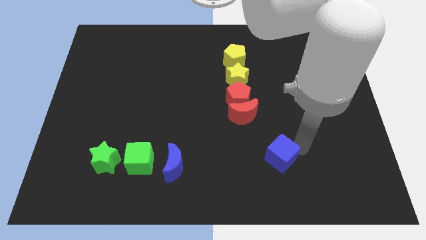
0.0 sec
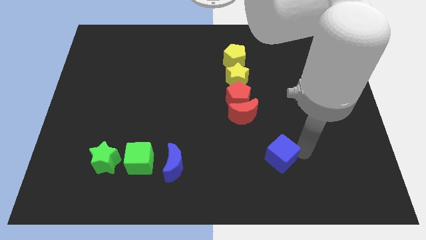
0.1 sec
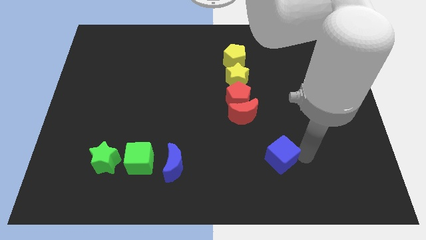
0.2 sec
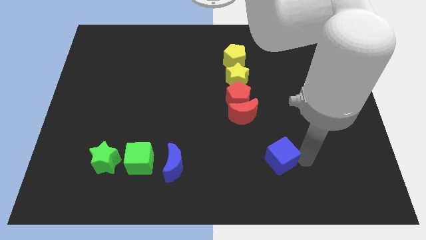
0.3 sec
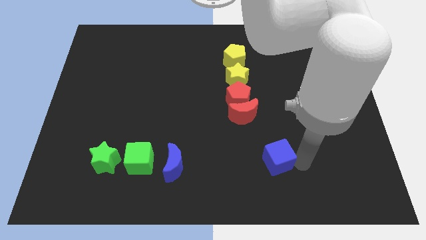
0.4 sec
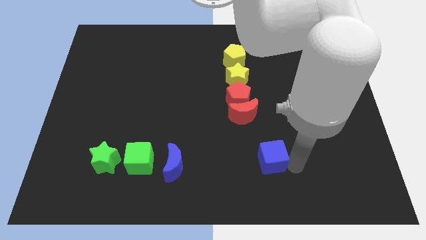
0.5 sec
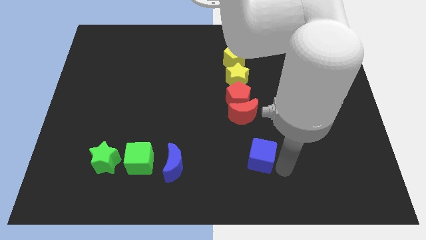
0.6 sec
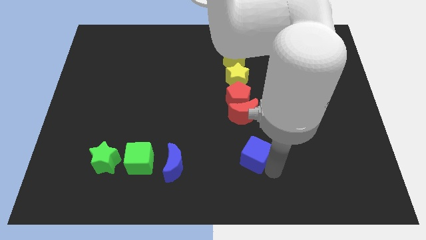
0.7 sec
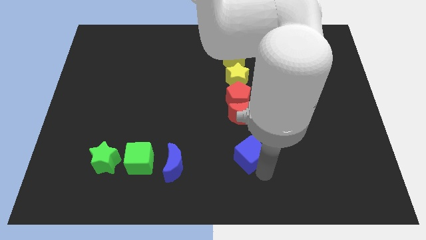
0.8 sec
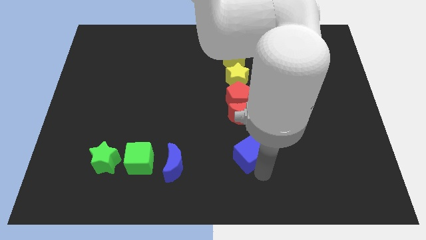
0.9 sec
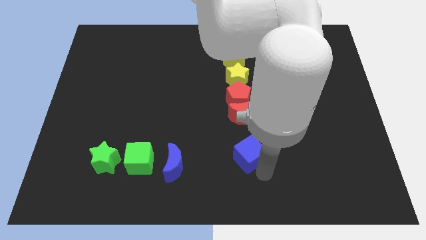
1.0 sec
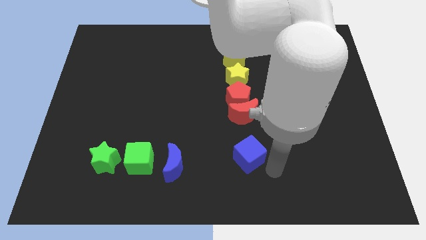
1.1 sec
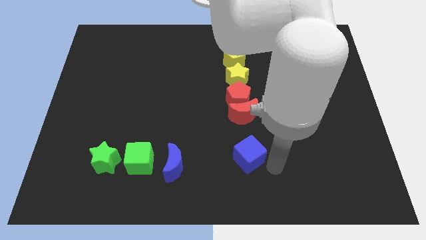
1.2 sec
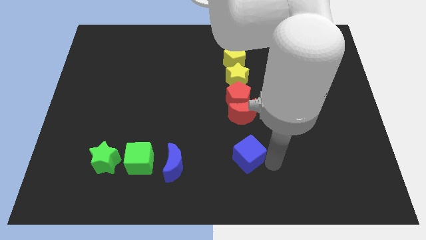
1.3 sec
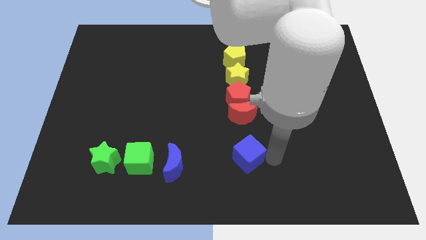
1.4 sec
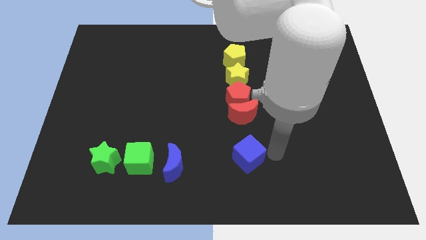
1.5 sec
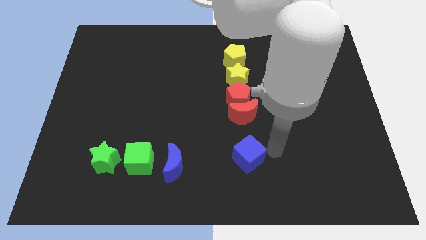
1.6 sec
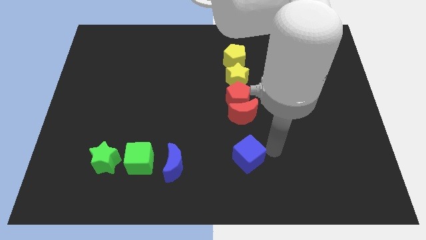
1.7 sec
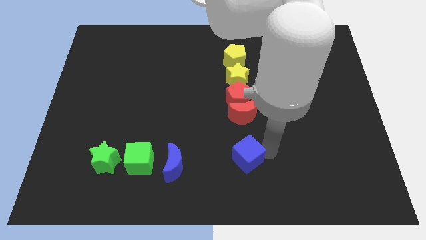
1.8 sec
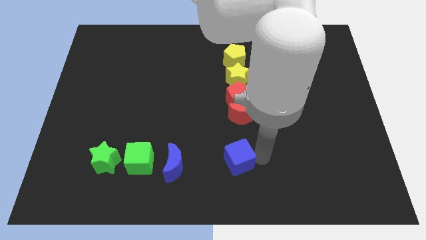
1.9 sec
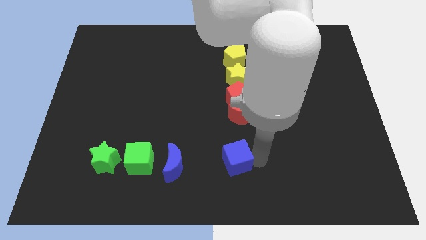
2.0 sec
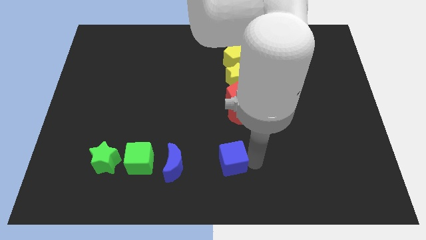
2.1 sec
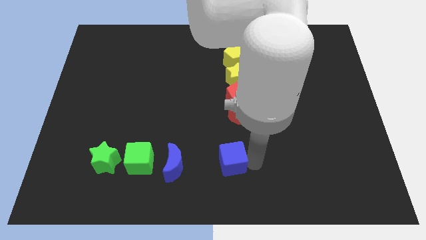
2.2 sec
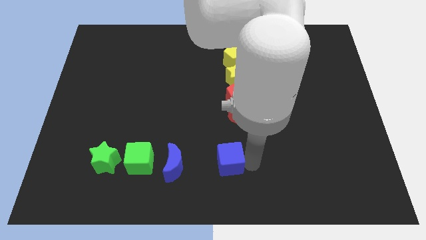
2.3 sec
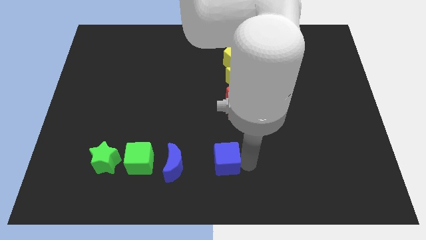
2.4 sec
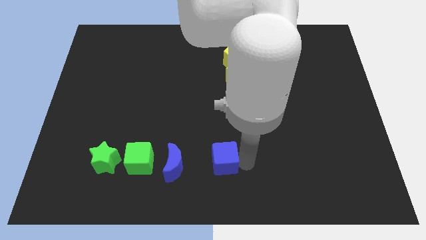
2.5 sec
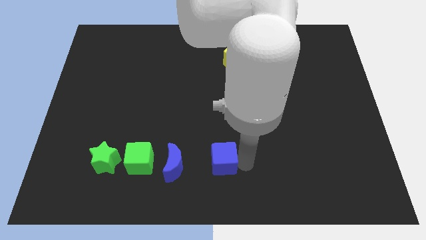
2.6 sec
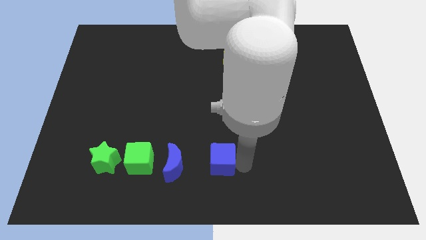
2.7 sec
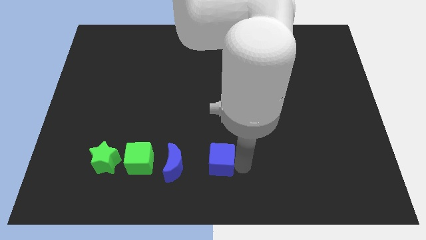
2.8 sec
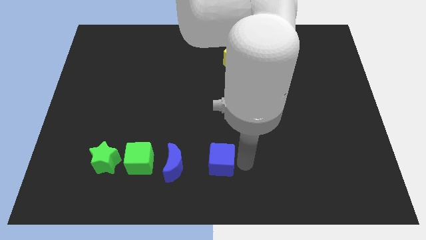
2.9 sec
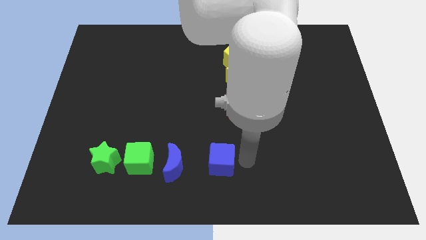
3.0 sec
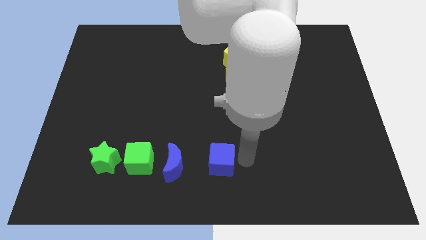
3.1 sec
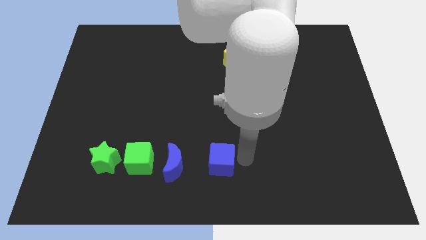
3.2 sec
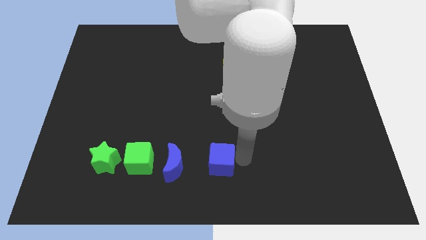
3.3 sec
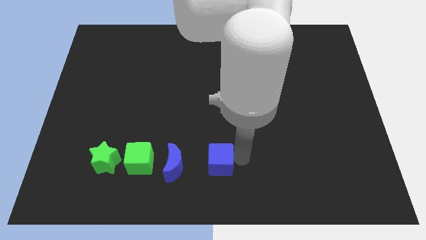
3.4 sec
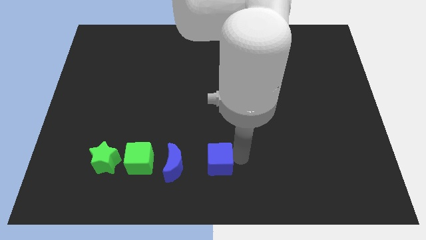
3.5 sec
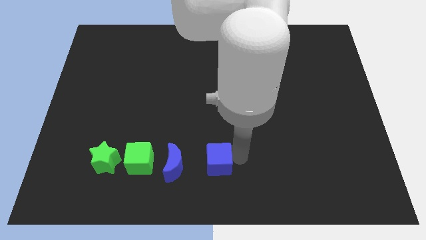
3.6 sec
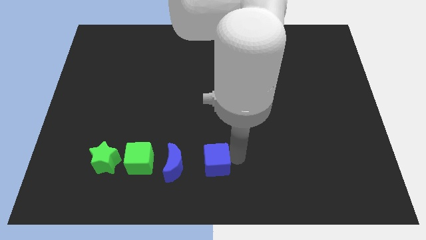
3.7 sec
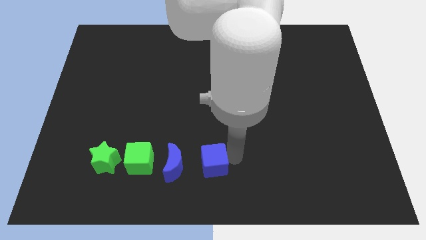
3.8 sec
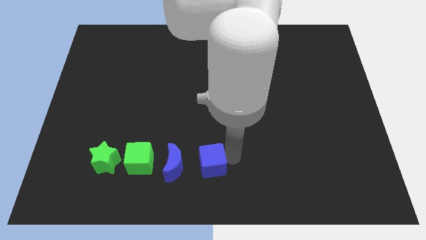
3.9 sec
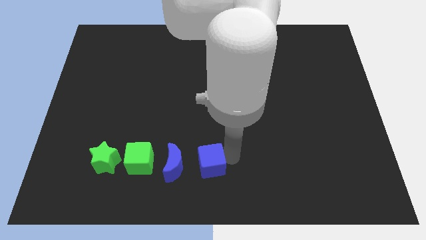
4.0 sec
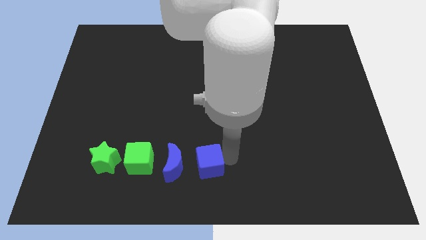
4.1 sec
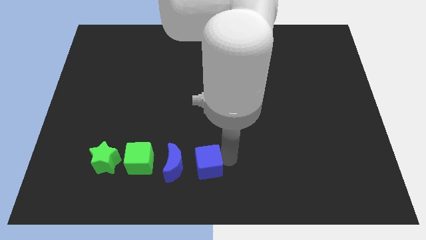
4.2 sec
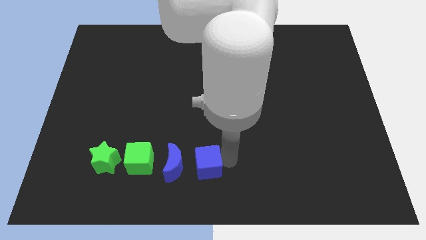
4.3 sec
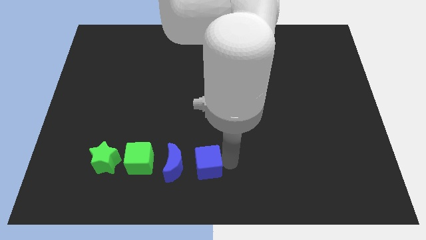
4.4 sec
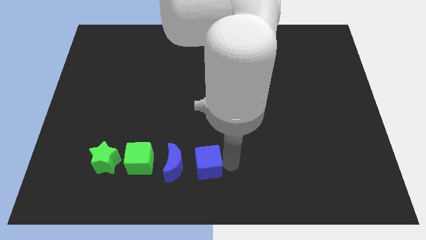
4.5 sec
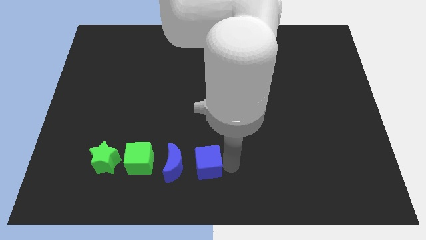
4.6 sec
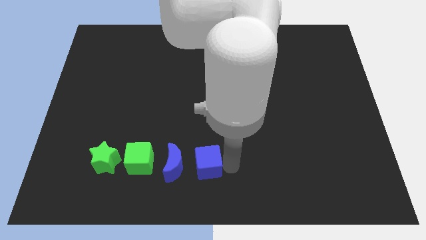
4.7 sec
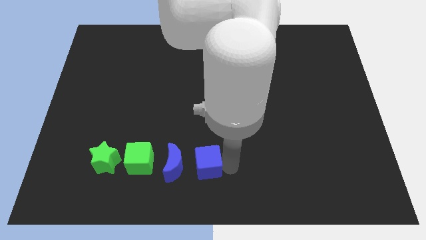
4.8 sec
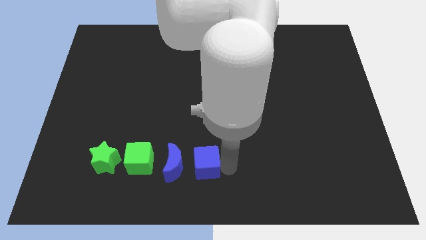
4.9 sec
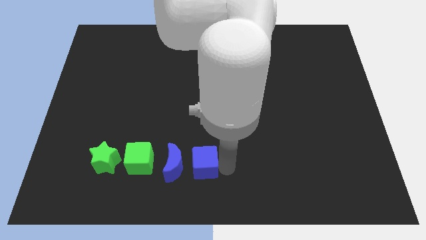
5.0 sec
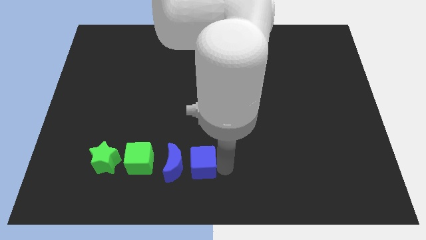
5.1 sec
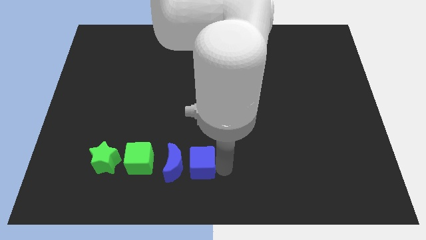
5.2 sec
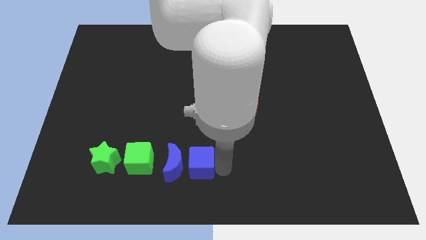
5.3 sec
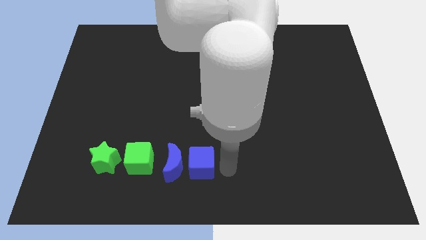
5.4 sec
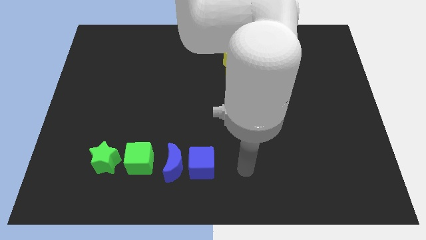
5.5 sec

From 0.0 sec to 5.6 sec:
place the blue cube to the right of the blue moon

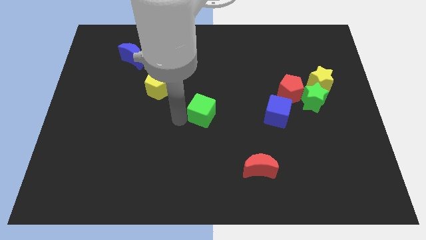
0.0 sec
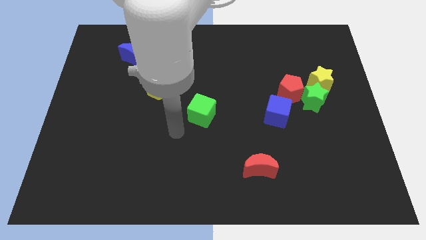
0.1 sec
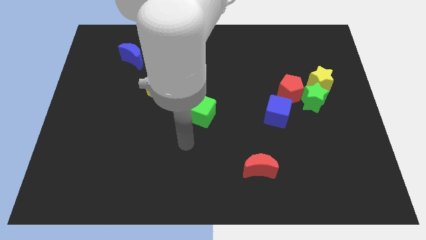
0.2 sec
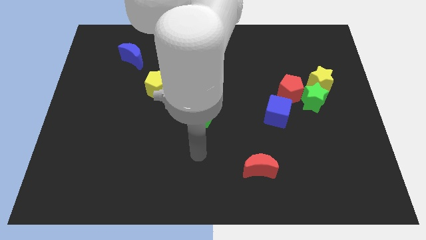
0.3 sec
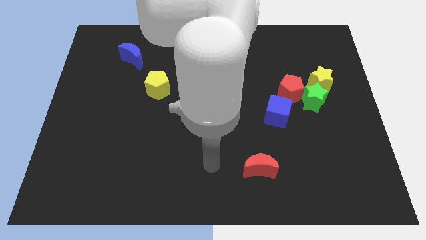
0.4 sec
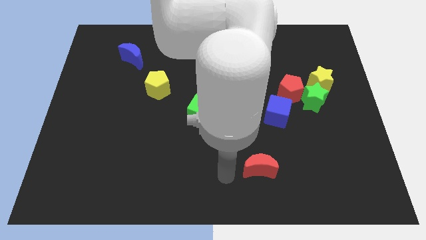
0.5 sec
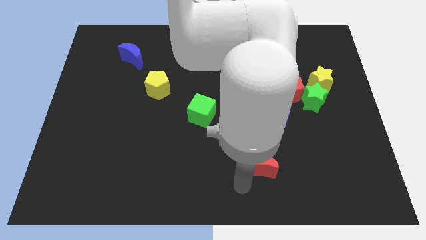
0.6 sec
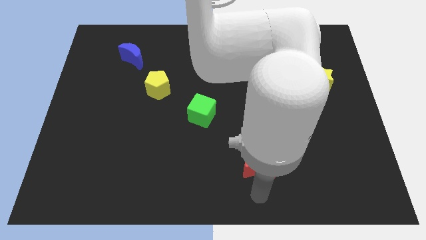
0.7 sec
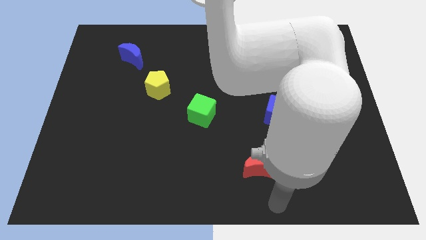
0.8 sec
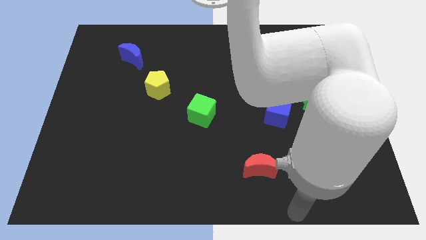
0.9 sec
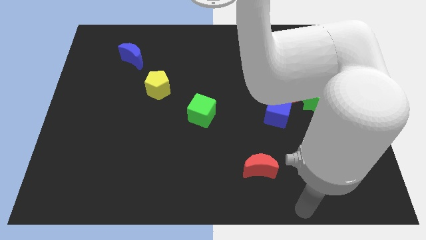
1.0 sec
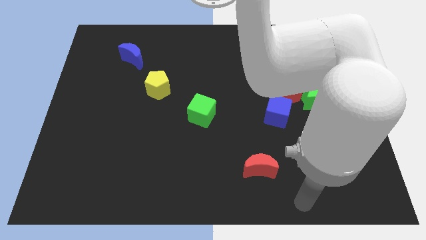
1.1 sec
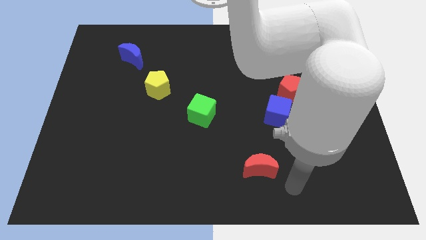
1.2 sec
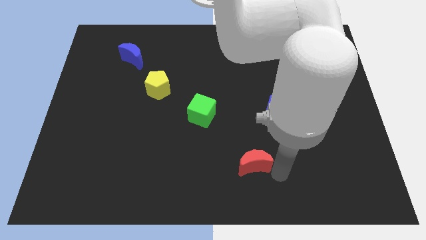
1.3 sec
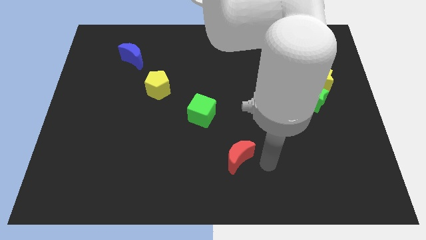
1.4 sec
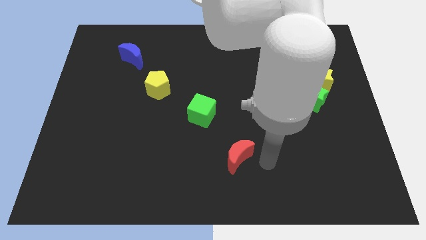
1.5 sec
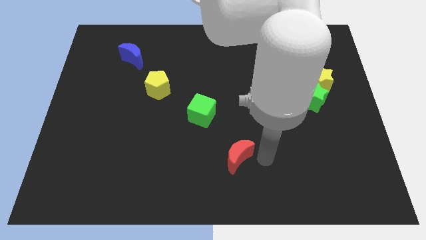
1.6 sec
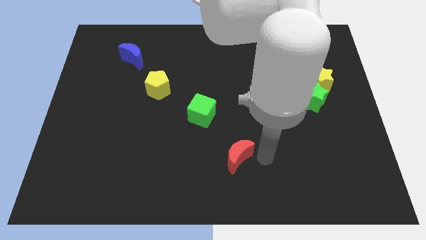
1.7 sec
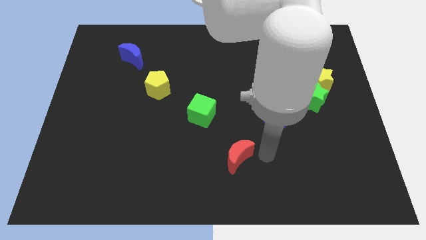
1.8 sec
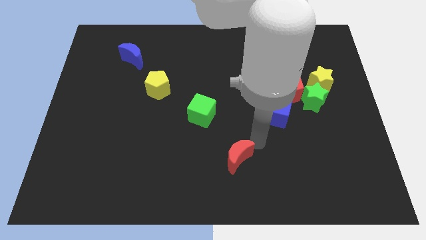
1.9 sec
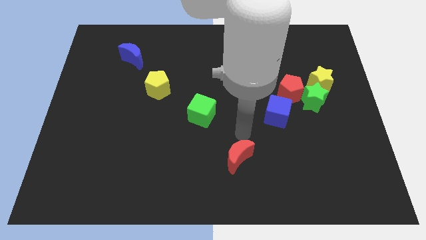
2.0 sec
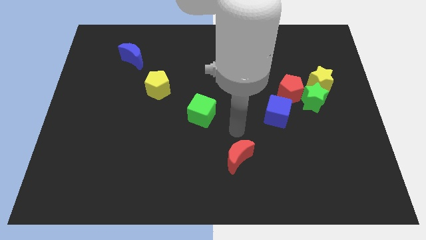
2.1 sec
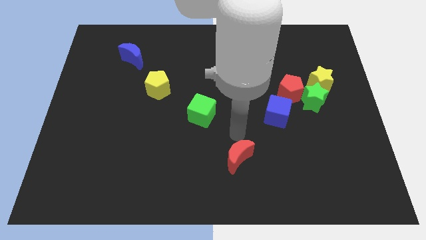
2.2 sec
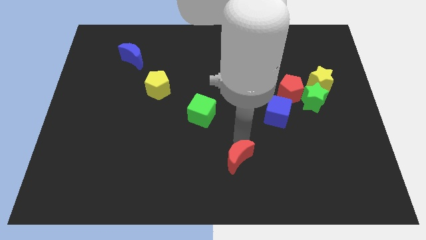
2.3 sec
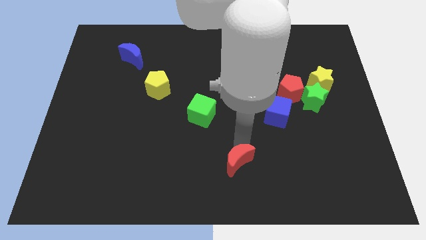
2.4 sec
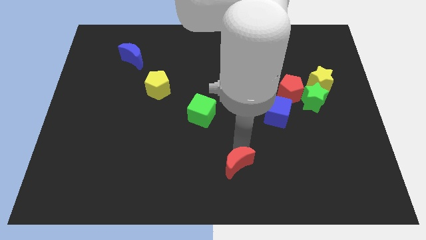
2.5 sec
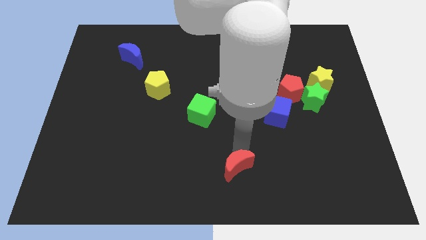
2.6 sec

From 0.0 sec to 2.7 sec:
place the red crescent diagonally towards green cube

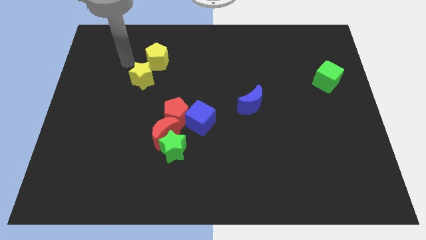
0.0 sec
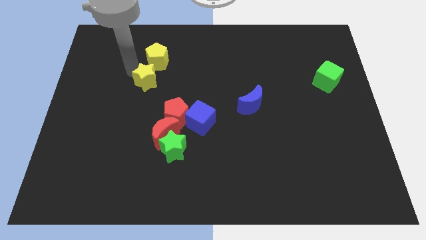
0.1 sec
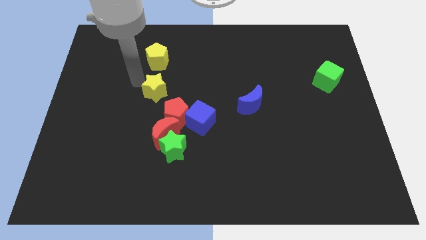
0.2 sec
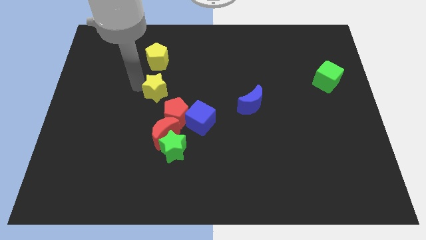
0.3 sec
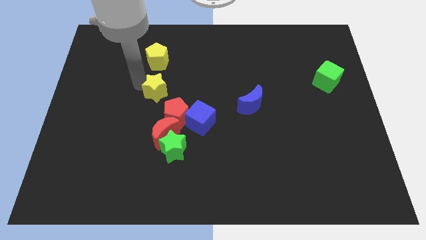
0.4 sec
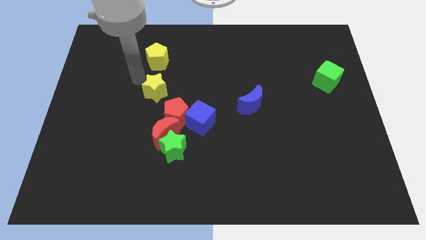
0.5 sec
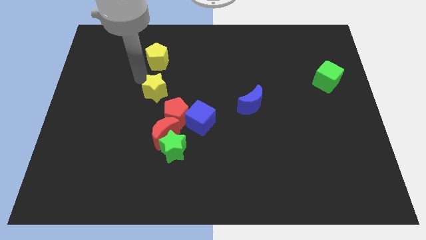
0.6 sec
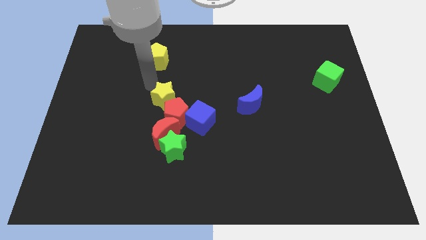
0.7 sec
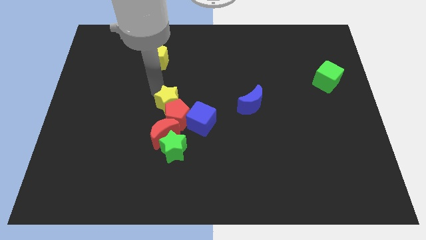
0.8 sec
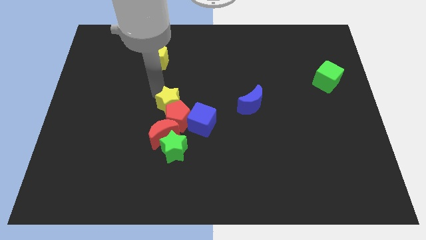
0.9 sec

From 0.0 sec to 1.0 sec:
push yellow star in to red pentagon
